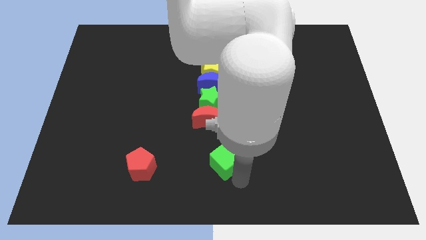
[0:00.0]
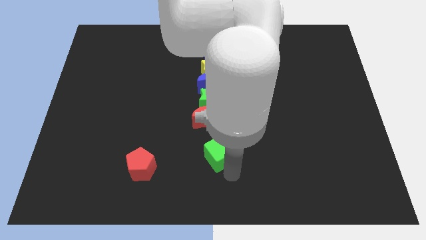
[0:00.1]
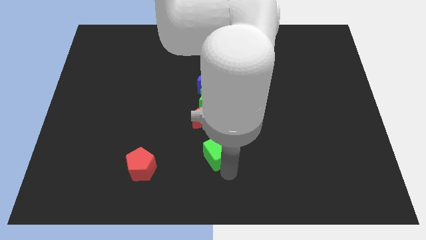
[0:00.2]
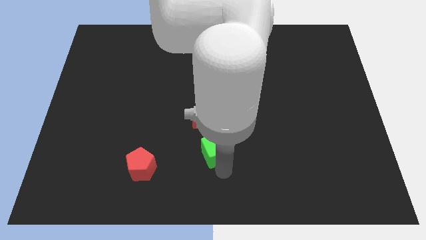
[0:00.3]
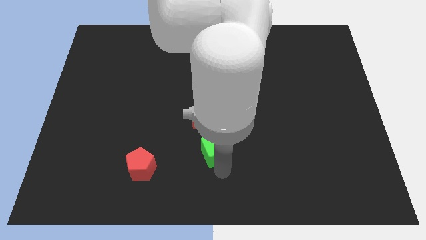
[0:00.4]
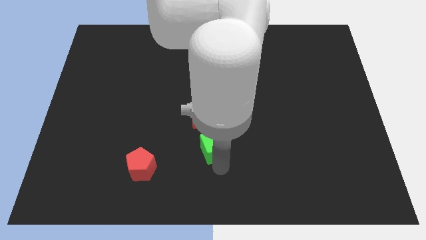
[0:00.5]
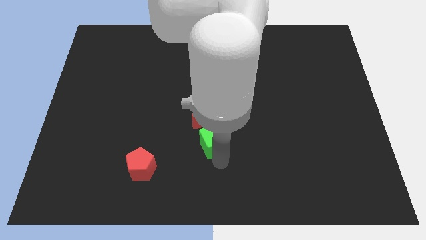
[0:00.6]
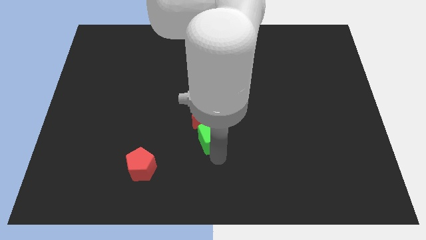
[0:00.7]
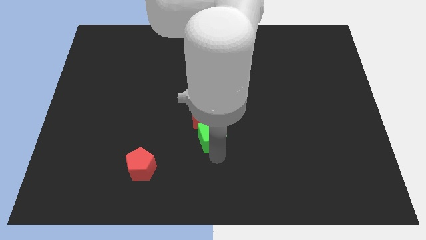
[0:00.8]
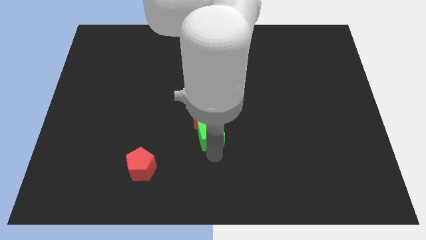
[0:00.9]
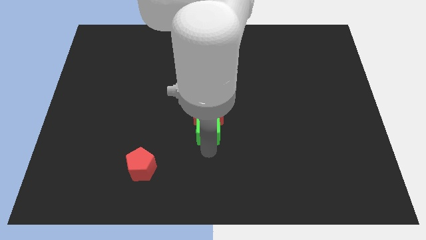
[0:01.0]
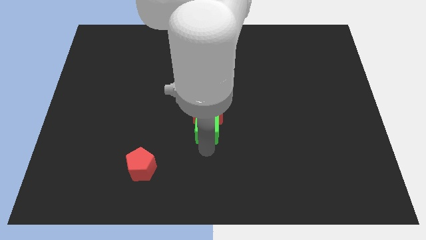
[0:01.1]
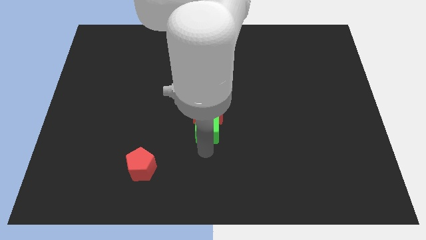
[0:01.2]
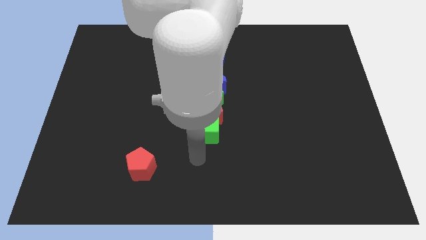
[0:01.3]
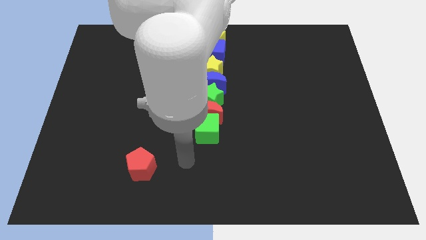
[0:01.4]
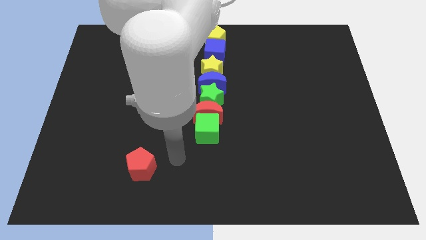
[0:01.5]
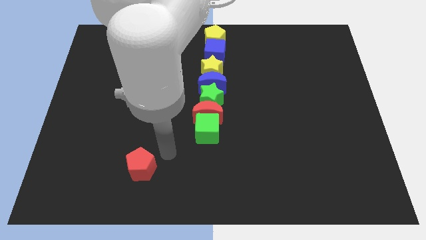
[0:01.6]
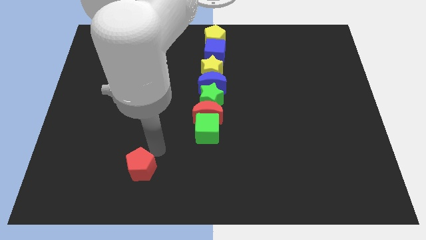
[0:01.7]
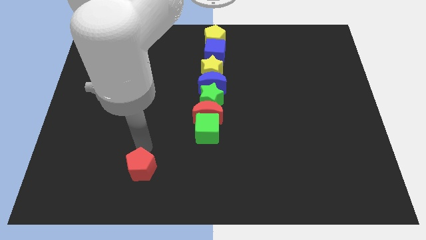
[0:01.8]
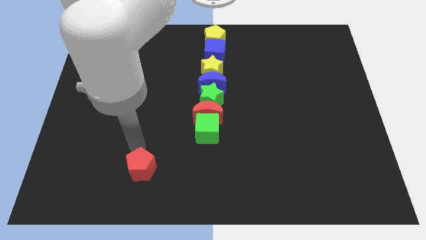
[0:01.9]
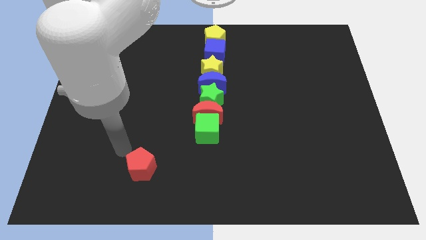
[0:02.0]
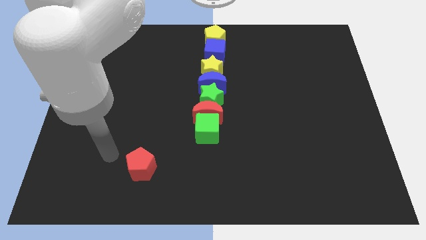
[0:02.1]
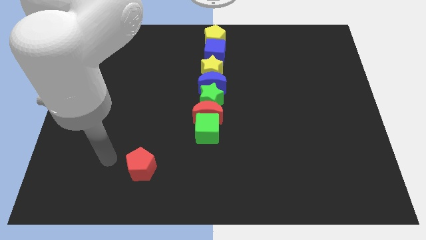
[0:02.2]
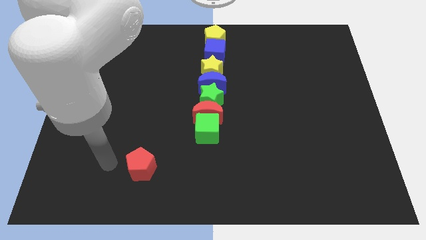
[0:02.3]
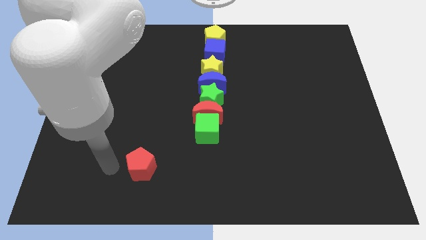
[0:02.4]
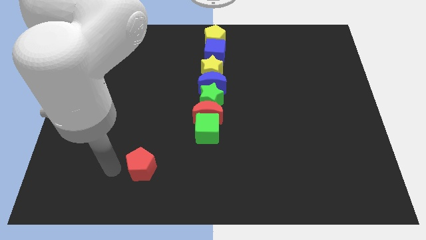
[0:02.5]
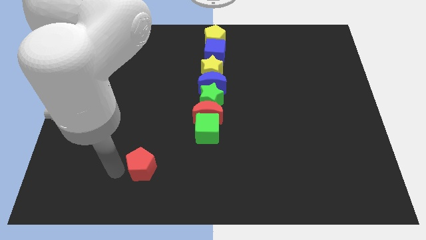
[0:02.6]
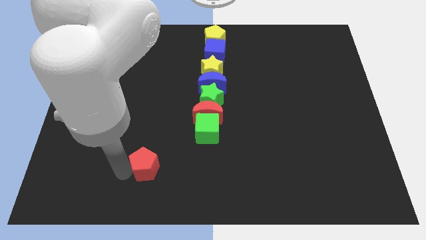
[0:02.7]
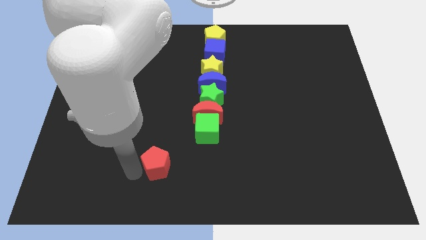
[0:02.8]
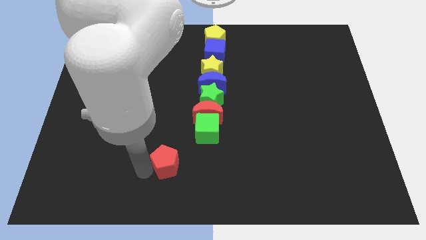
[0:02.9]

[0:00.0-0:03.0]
place the green cube below the red moon

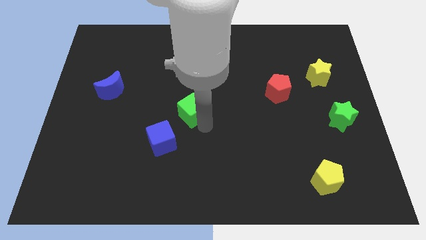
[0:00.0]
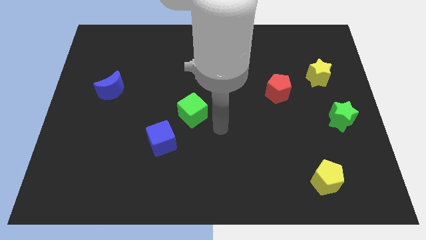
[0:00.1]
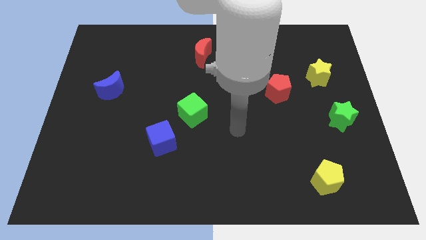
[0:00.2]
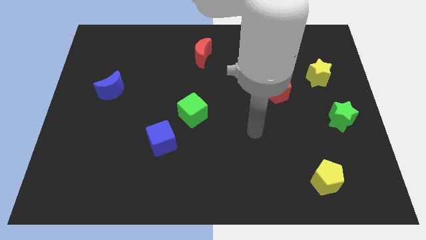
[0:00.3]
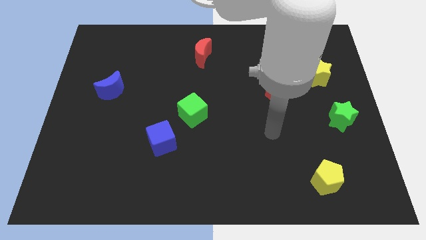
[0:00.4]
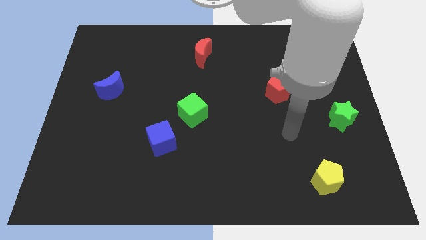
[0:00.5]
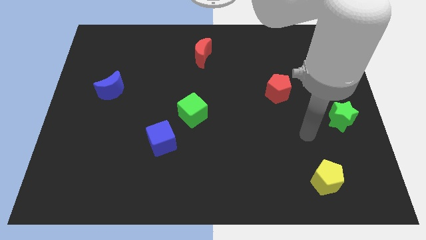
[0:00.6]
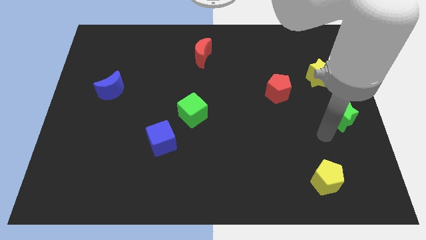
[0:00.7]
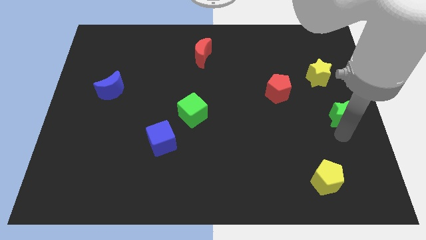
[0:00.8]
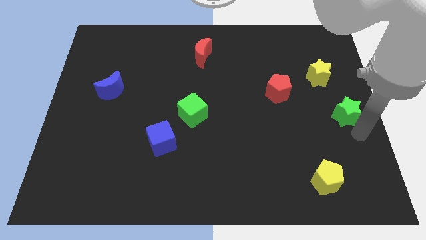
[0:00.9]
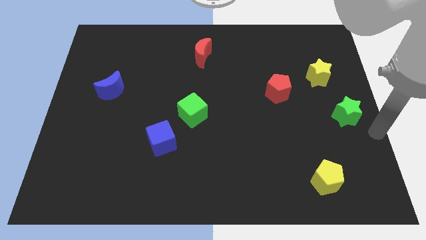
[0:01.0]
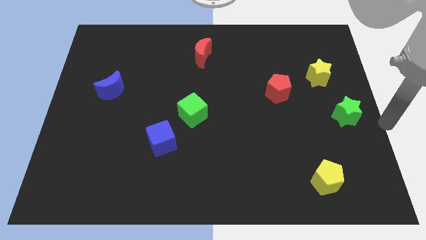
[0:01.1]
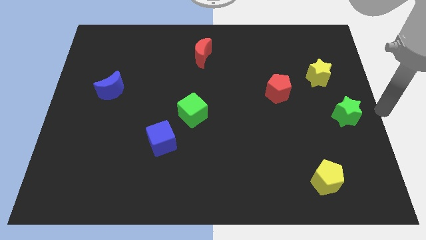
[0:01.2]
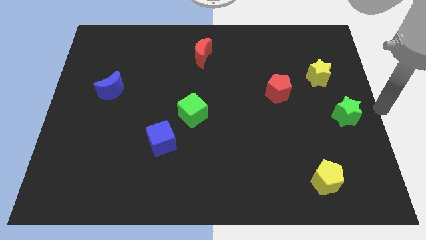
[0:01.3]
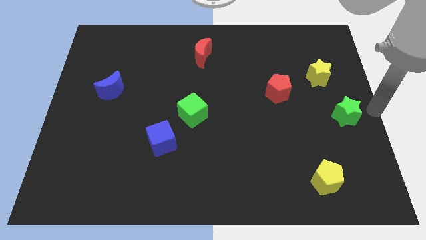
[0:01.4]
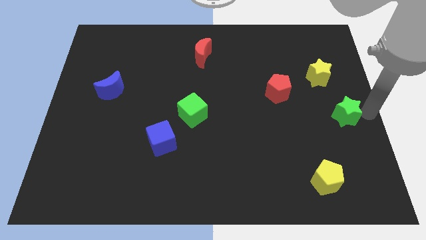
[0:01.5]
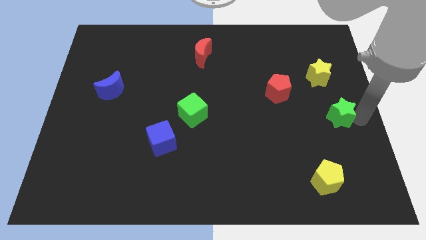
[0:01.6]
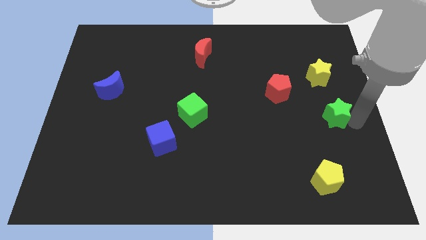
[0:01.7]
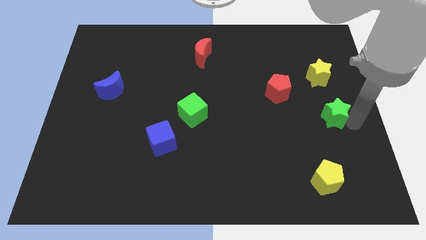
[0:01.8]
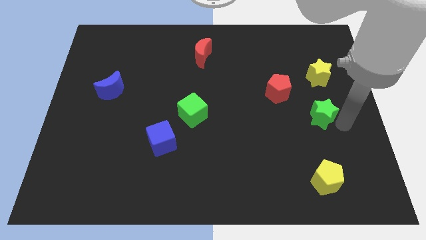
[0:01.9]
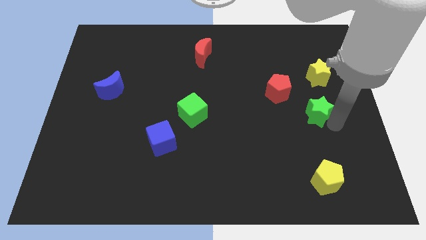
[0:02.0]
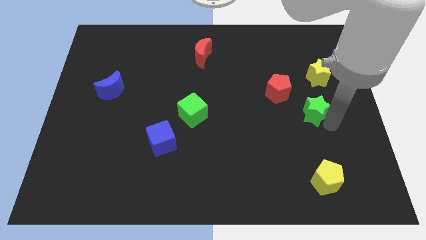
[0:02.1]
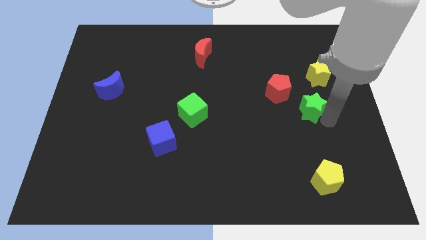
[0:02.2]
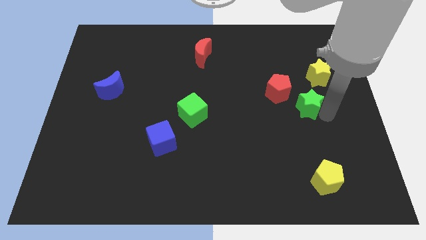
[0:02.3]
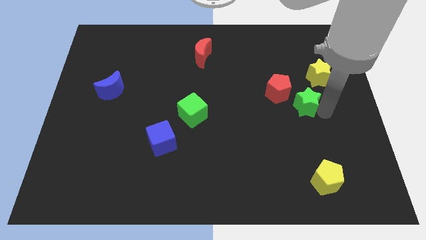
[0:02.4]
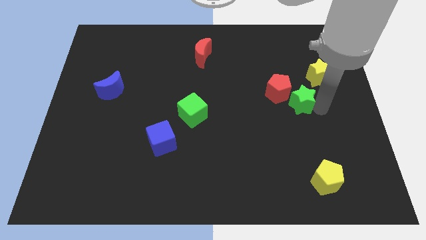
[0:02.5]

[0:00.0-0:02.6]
place the green star at the bottom right side of red pentagon

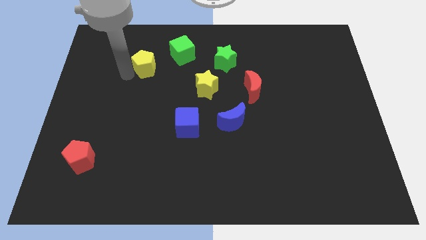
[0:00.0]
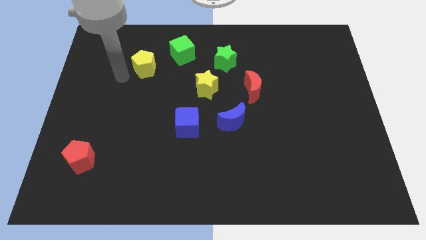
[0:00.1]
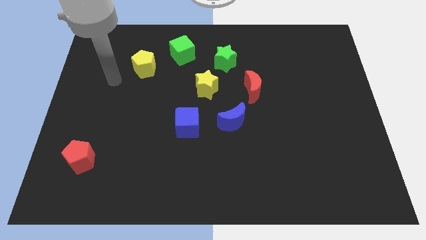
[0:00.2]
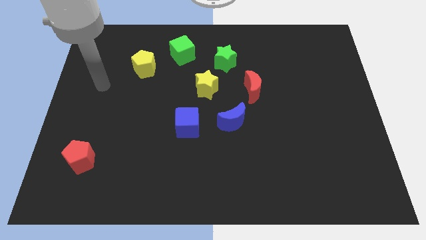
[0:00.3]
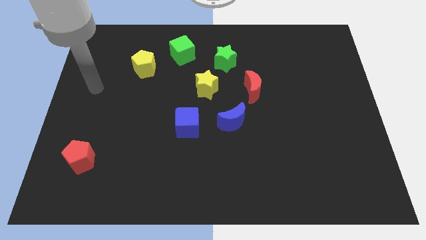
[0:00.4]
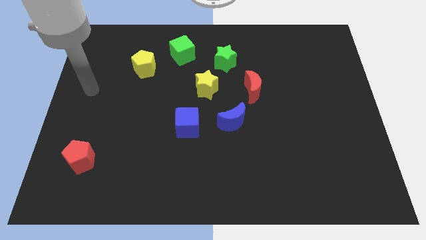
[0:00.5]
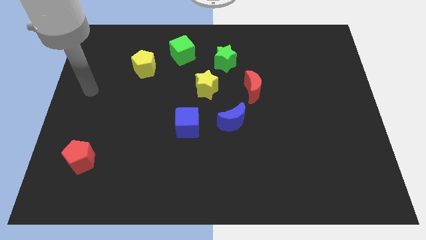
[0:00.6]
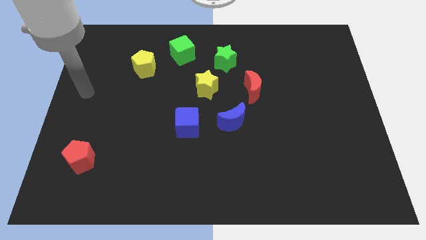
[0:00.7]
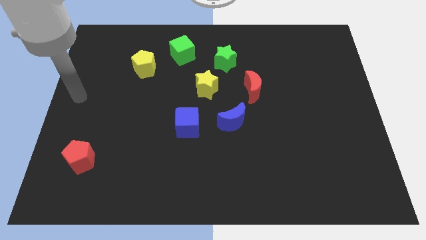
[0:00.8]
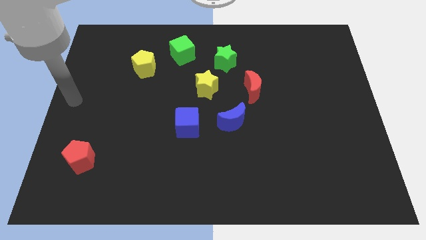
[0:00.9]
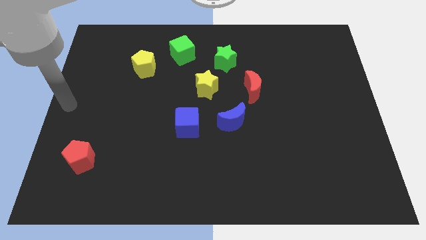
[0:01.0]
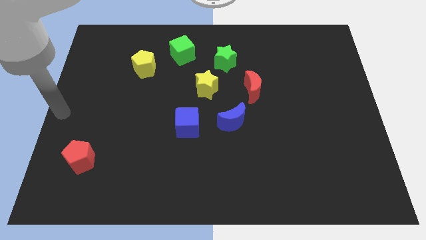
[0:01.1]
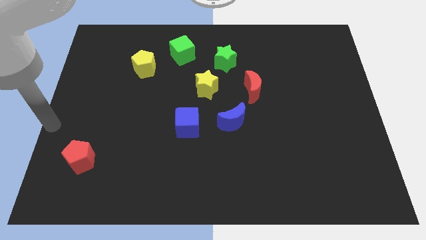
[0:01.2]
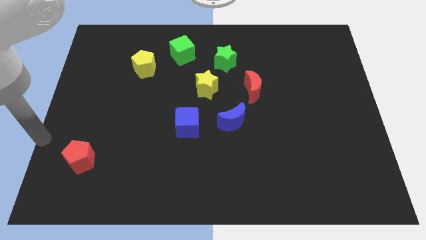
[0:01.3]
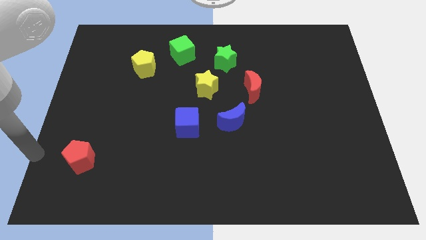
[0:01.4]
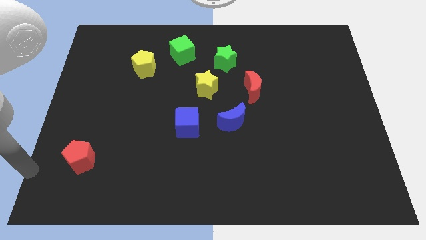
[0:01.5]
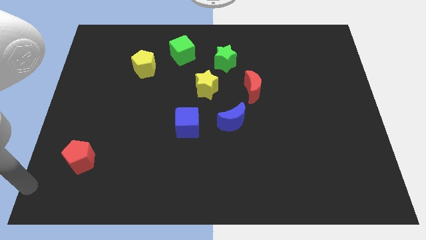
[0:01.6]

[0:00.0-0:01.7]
move your arm to the bottom left of the board

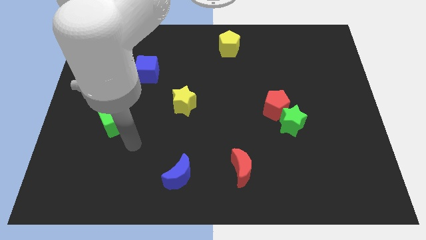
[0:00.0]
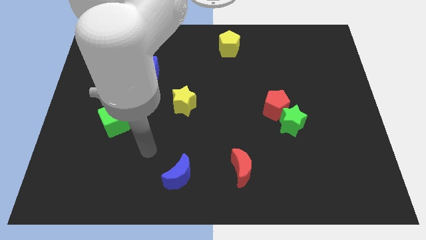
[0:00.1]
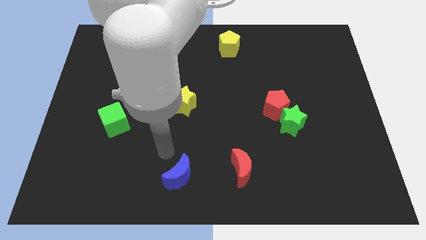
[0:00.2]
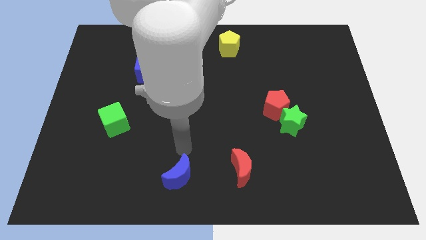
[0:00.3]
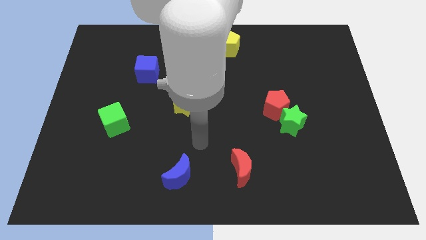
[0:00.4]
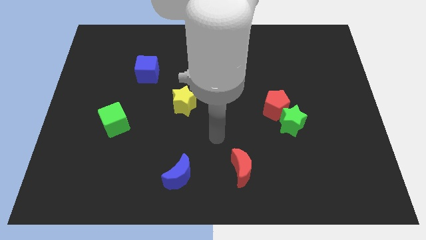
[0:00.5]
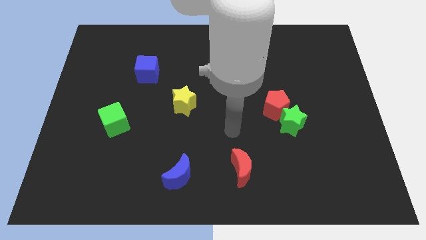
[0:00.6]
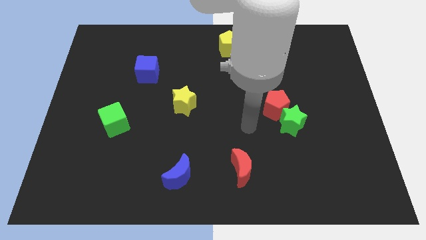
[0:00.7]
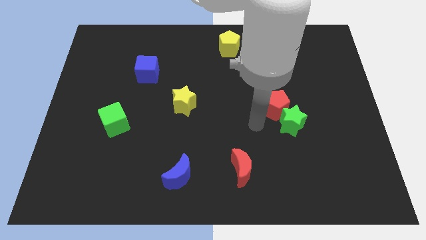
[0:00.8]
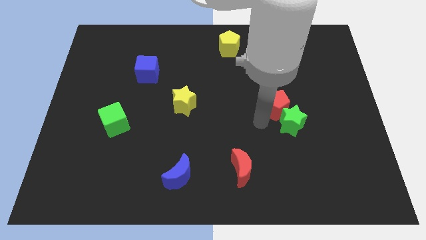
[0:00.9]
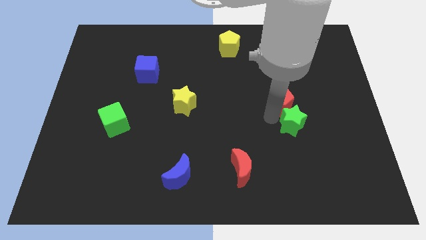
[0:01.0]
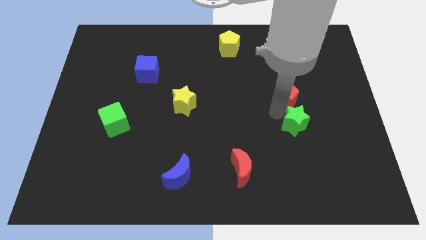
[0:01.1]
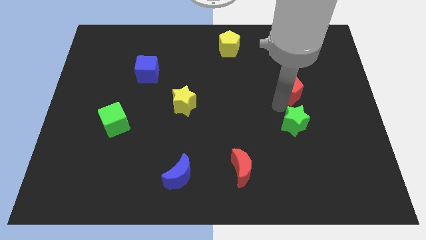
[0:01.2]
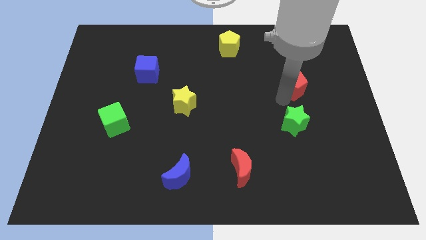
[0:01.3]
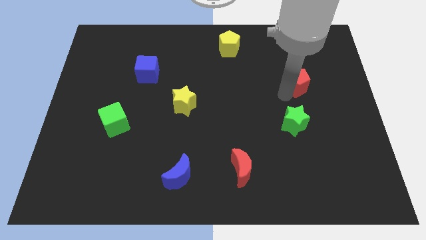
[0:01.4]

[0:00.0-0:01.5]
place the red pentagon above the green star

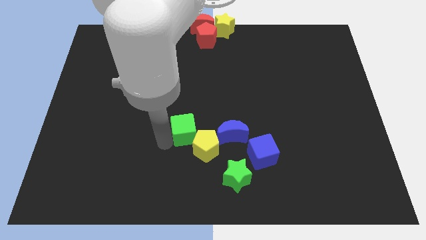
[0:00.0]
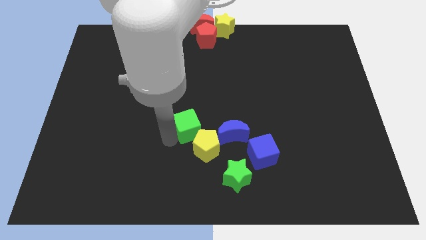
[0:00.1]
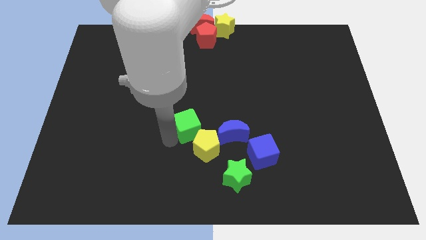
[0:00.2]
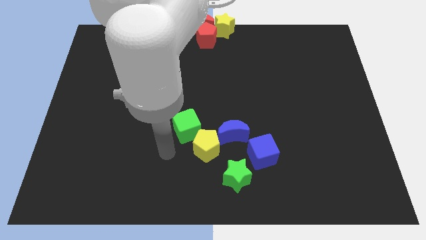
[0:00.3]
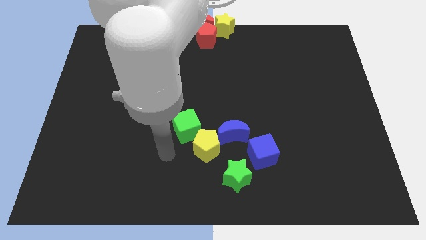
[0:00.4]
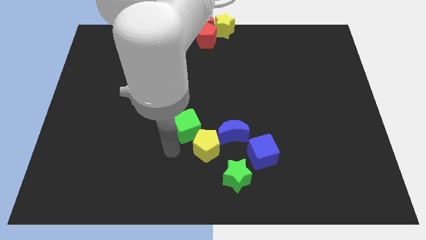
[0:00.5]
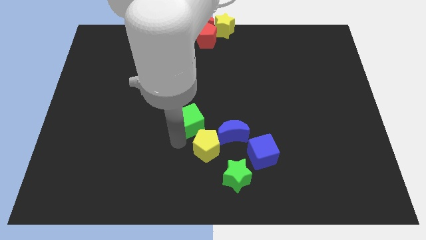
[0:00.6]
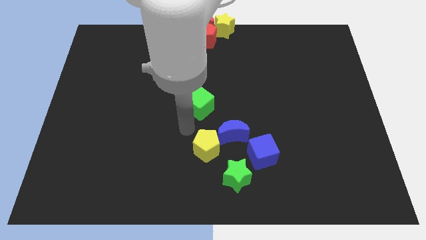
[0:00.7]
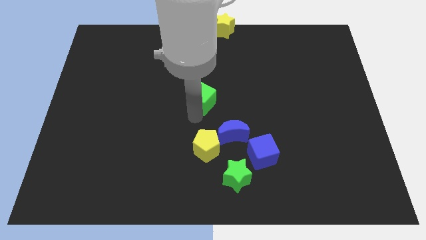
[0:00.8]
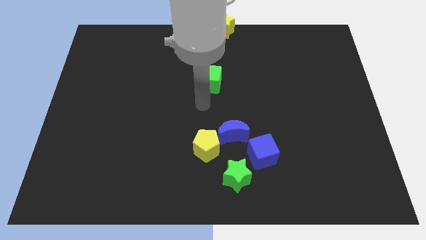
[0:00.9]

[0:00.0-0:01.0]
separate the green cube and yellow pentagon
